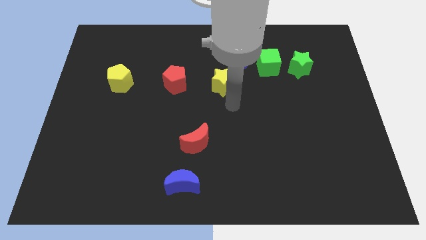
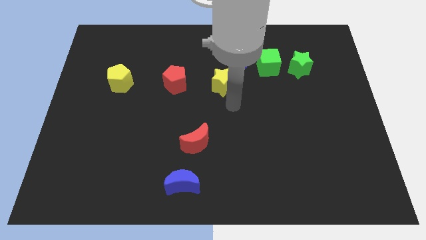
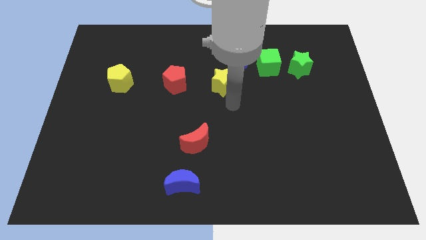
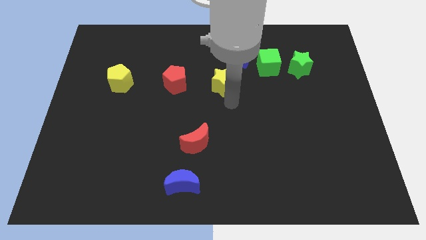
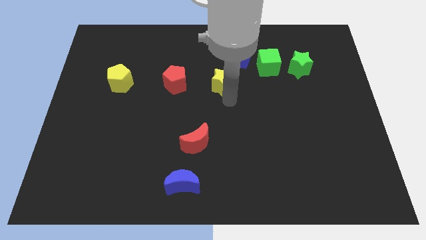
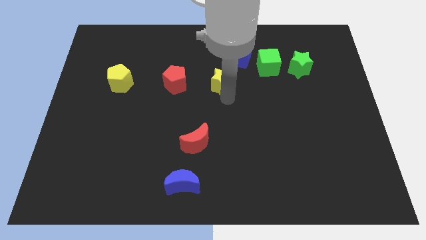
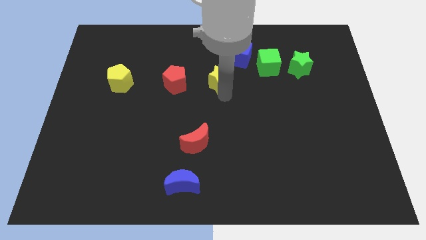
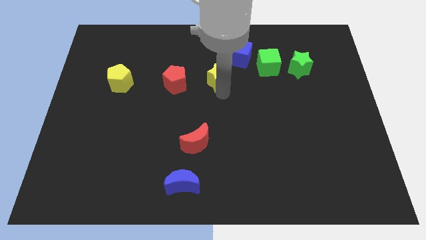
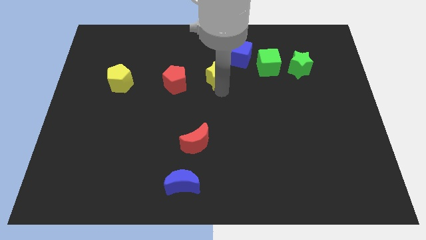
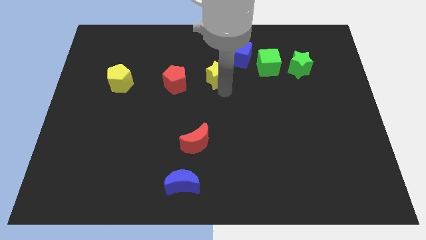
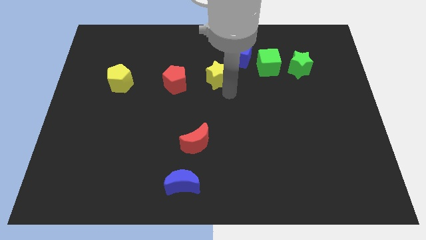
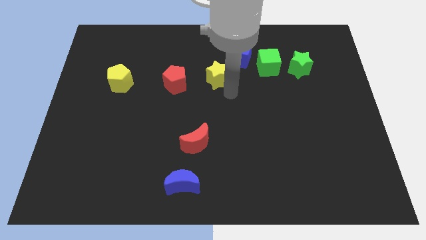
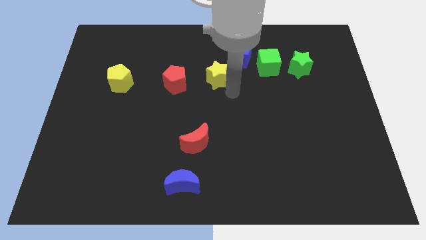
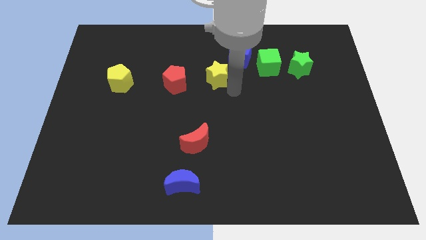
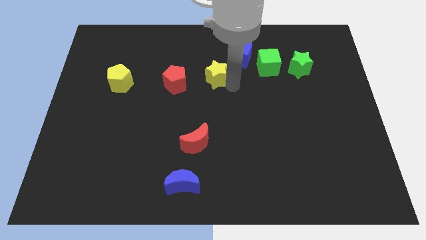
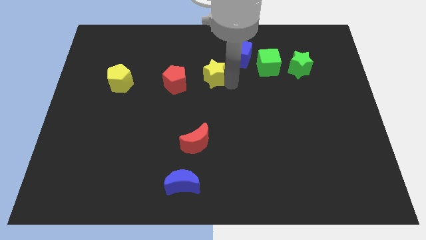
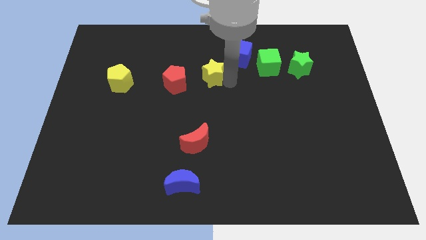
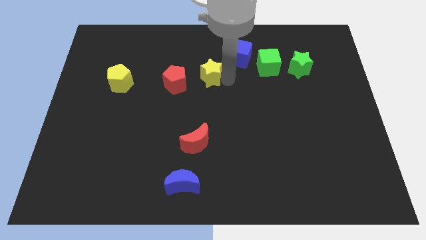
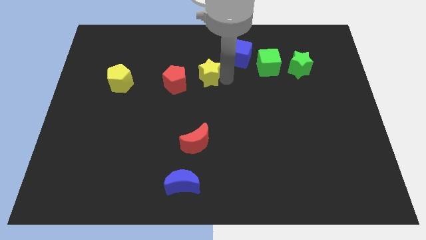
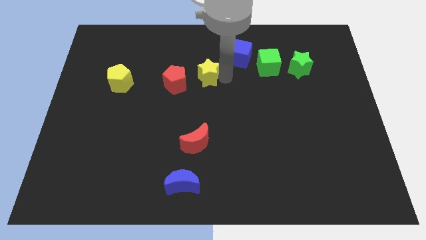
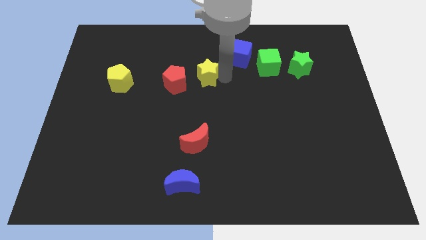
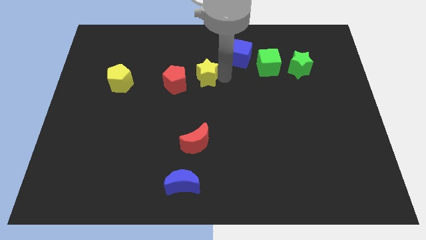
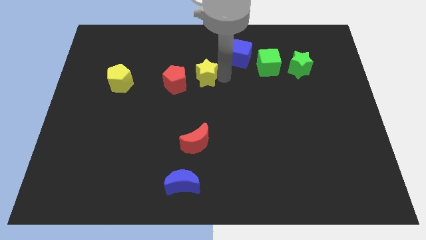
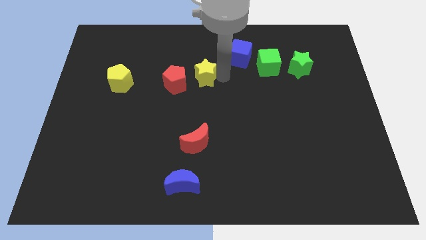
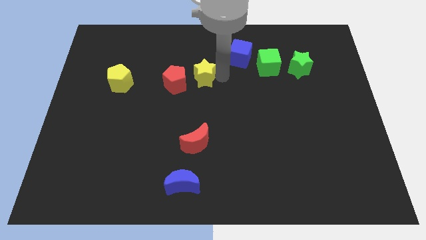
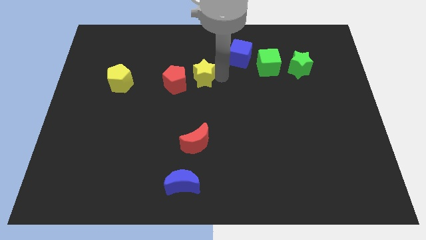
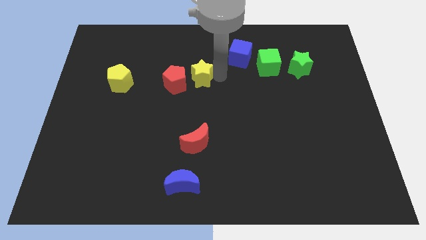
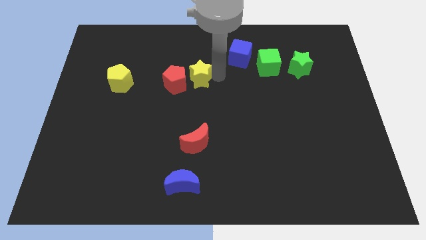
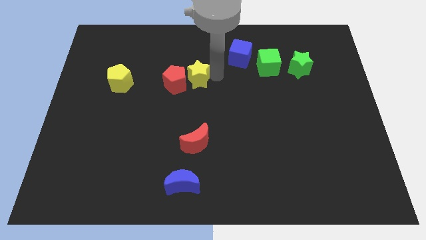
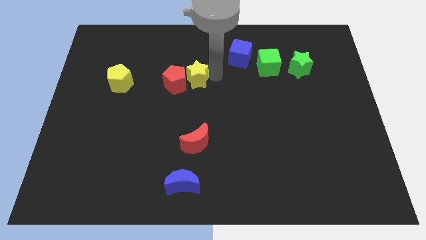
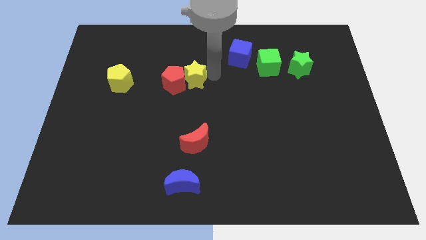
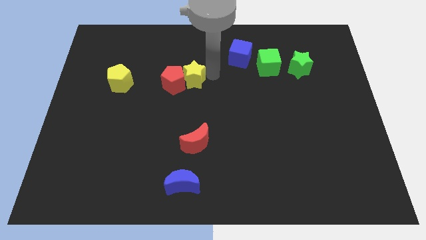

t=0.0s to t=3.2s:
place yellow star beside red pentagon

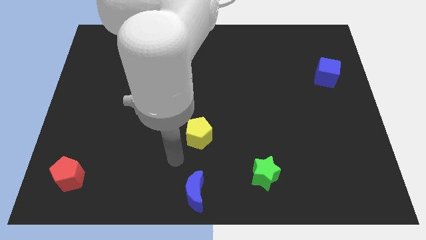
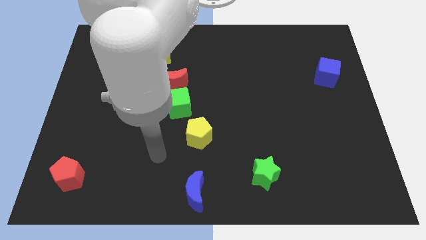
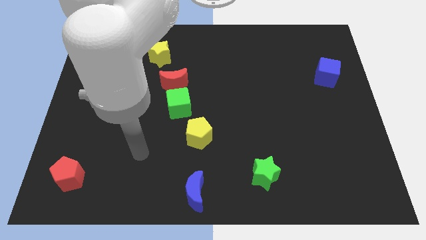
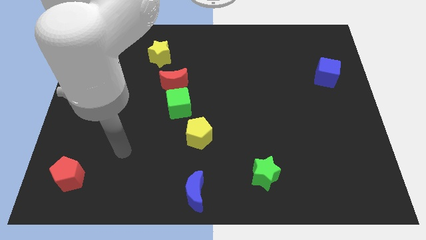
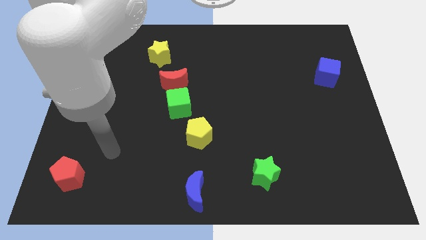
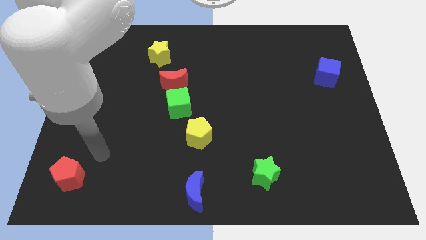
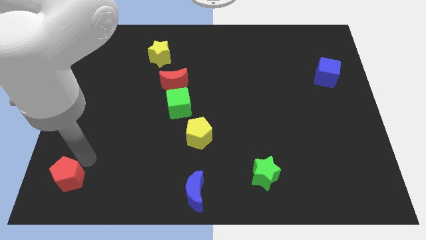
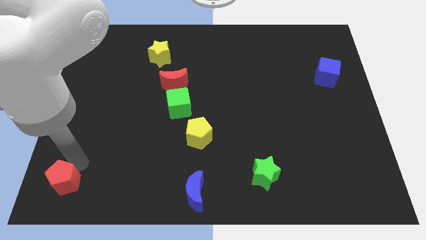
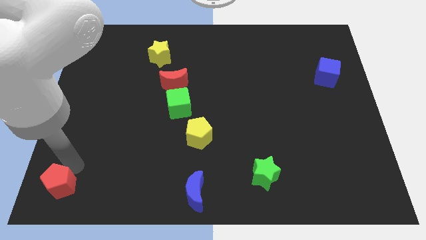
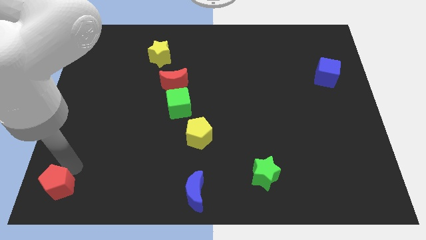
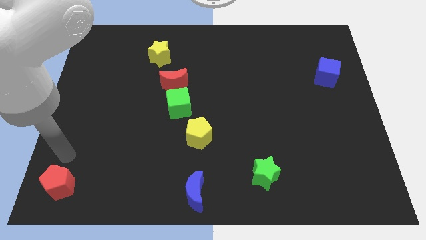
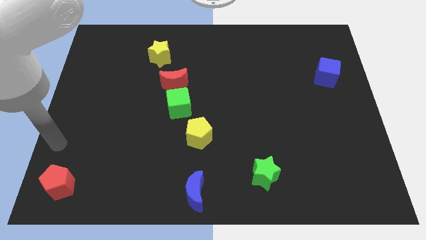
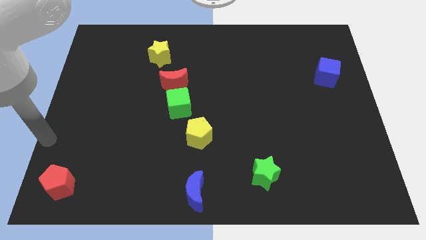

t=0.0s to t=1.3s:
slide the red pentagon slightly to the bottom left of the table

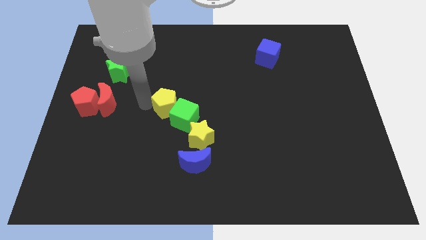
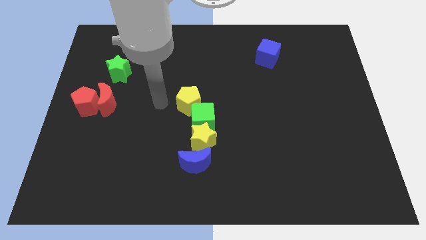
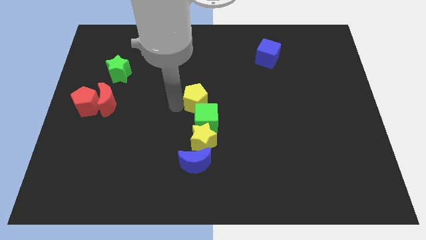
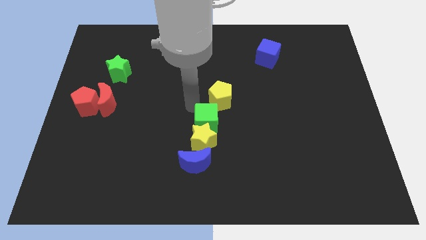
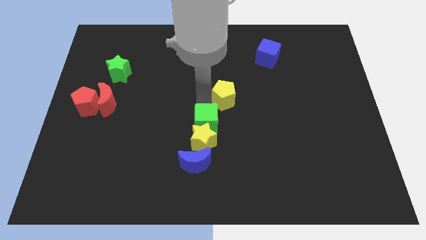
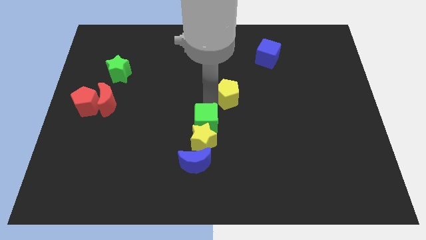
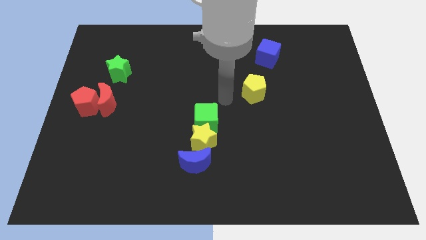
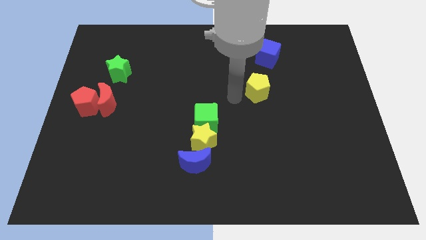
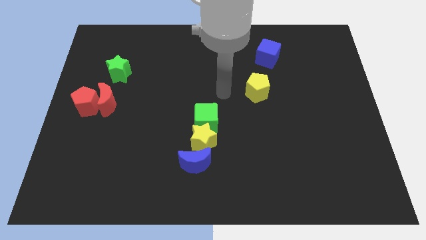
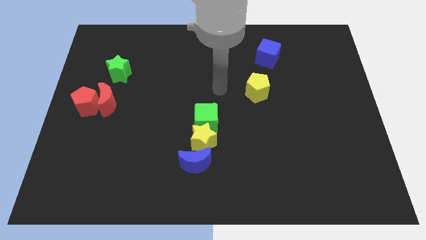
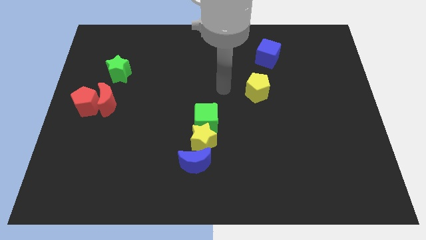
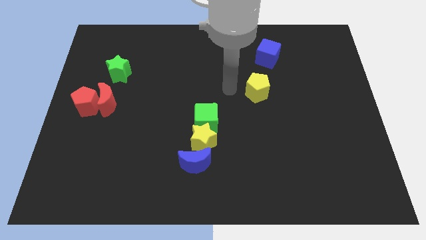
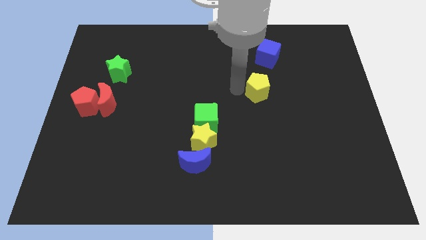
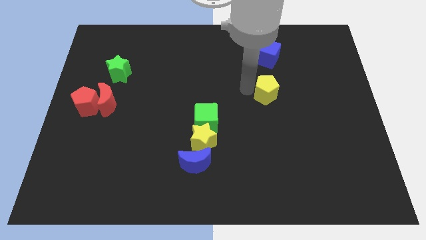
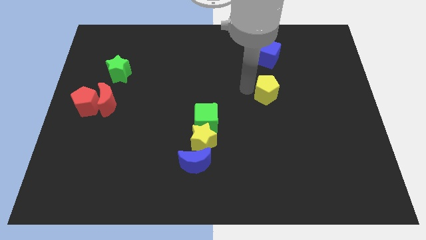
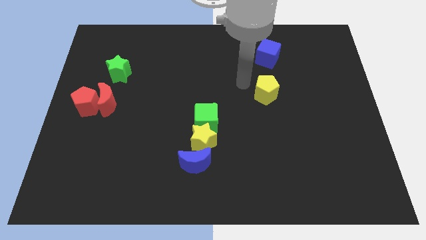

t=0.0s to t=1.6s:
place the yellow pentagon below the blue cube

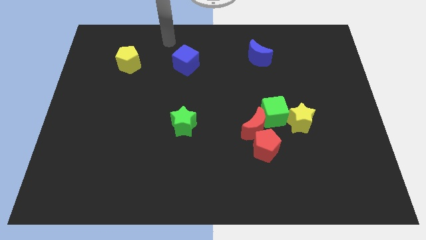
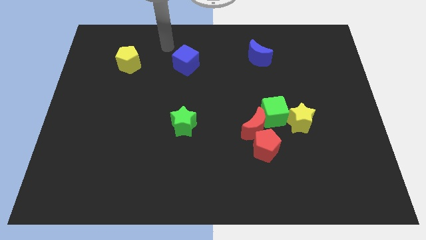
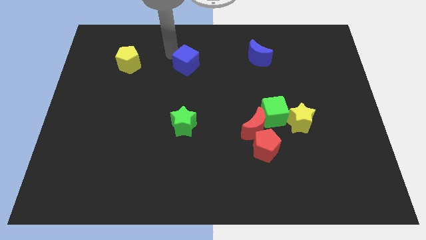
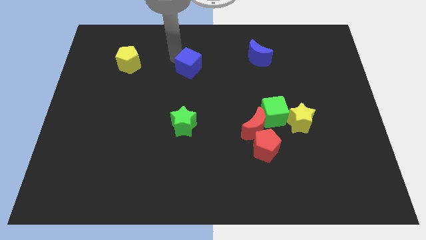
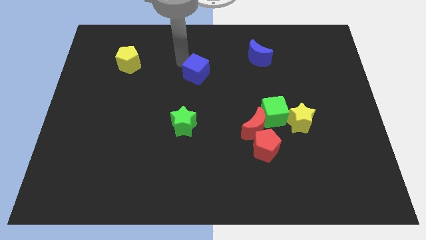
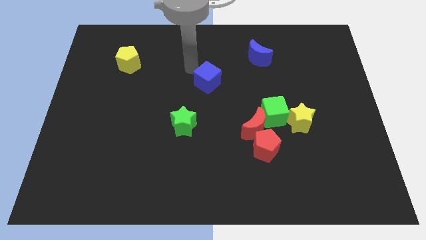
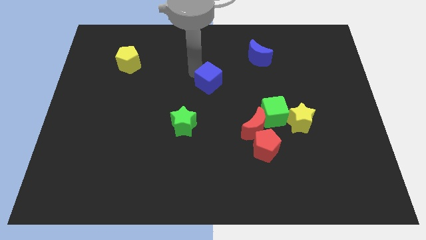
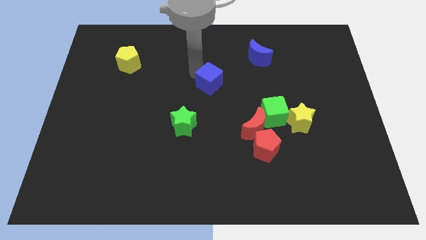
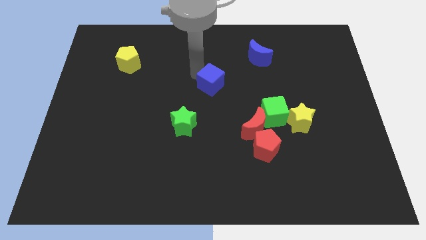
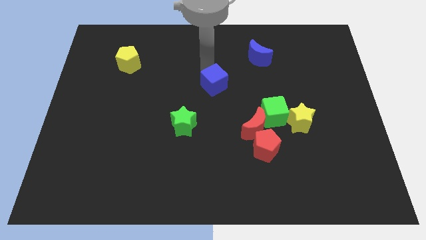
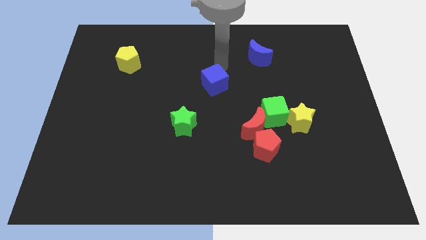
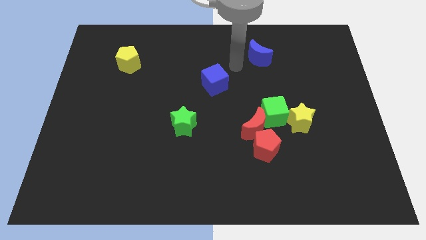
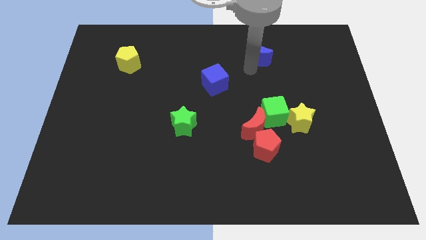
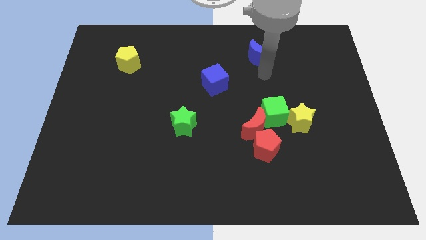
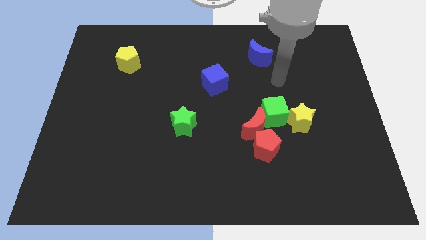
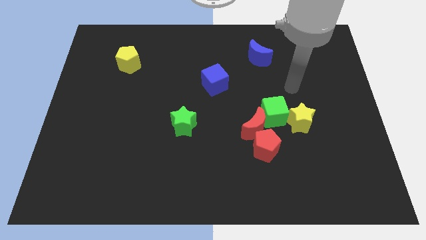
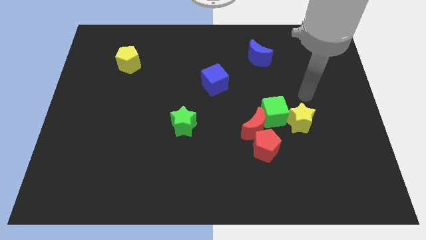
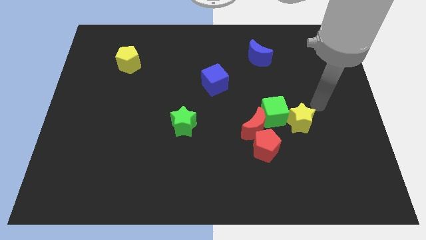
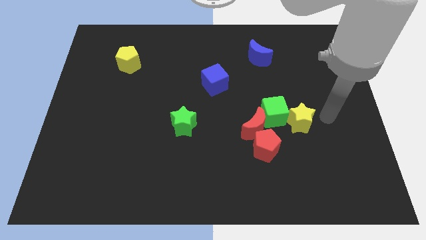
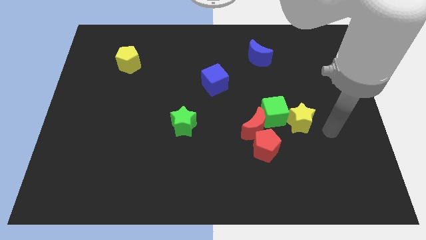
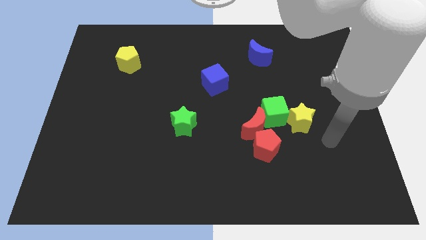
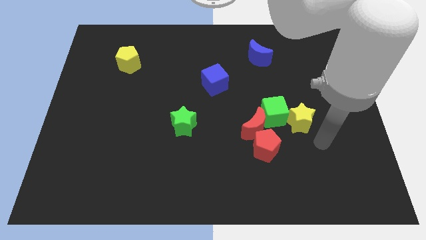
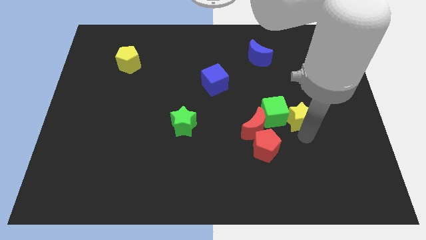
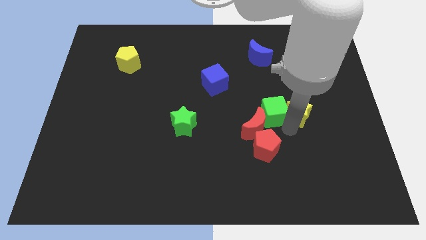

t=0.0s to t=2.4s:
place the arm down to the yellow star

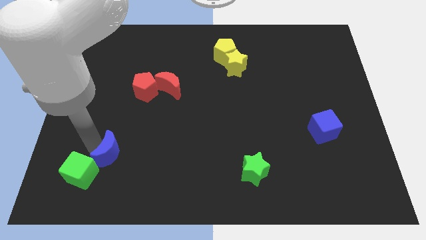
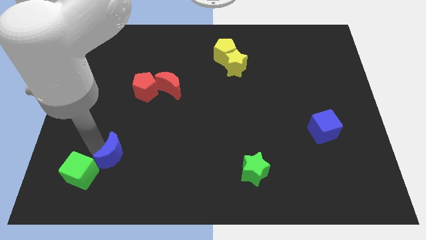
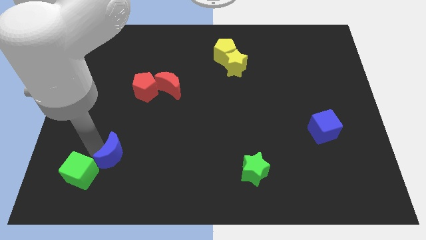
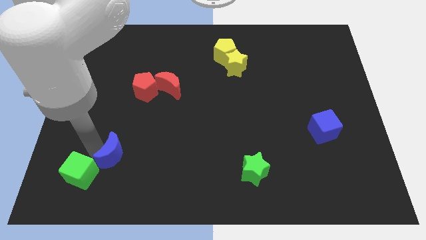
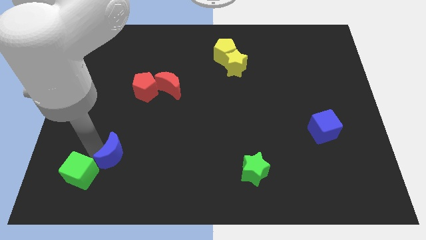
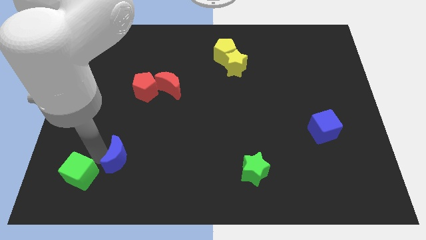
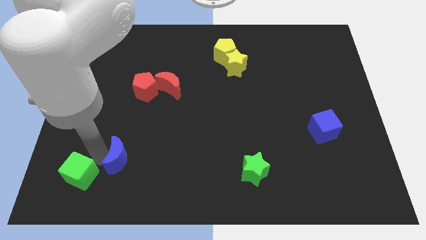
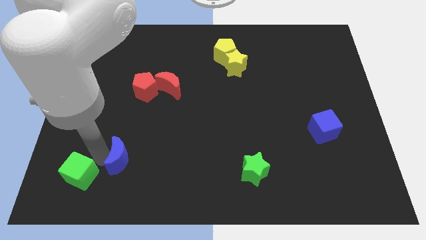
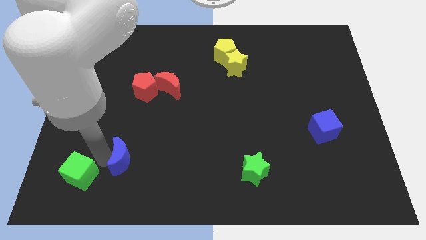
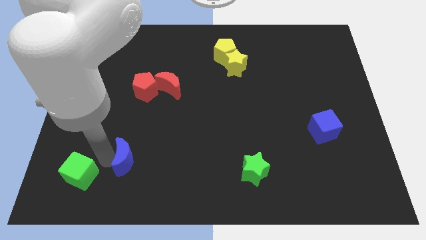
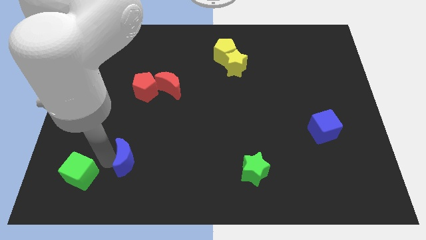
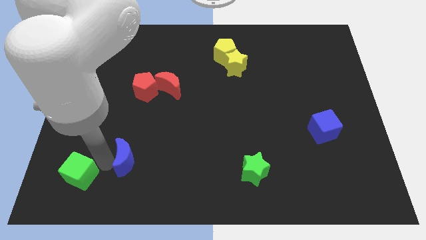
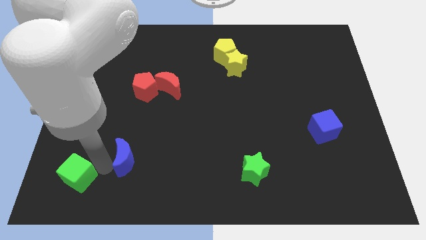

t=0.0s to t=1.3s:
separate the blue moon from green cube
